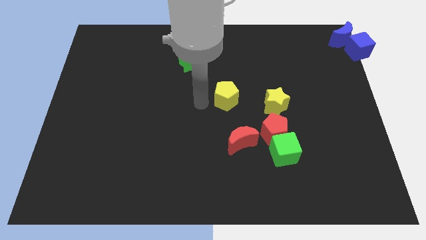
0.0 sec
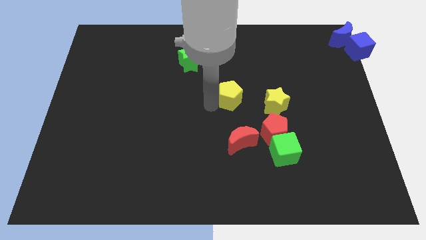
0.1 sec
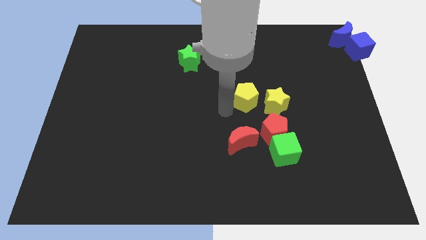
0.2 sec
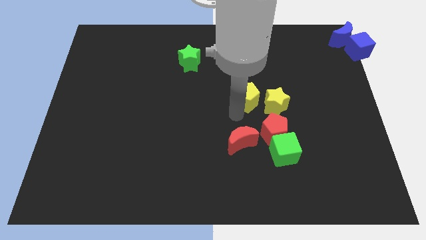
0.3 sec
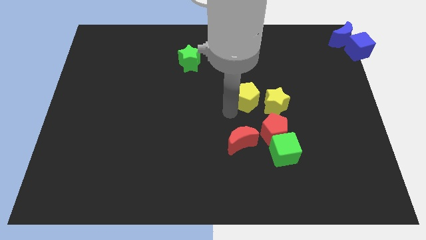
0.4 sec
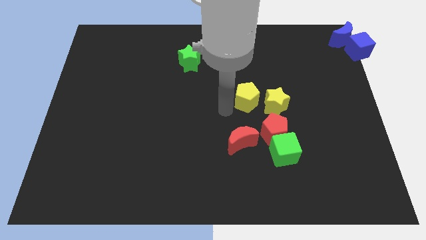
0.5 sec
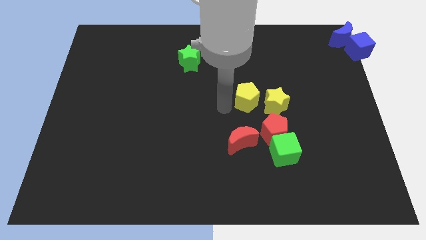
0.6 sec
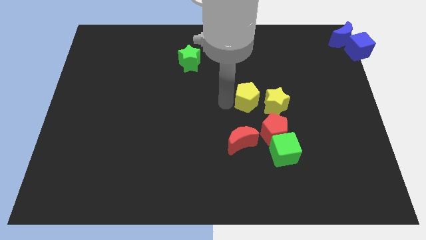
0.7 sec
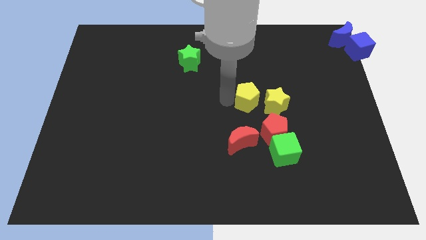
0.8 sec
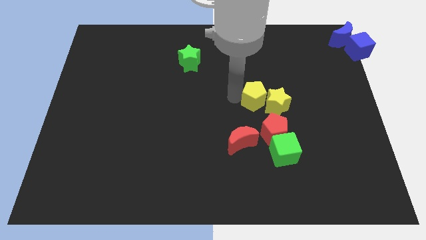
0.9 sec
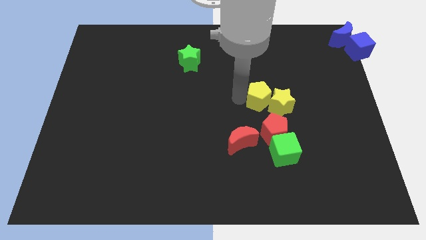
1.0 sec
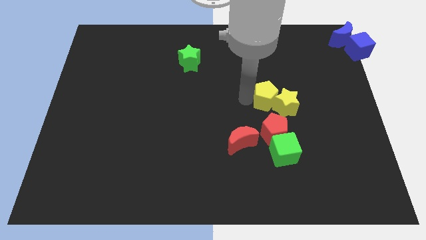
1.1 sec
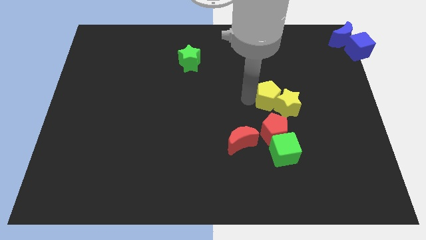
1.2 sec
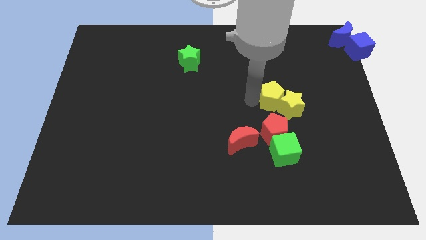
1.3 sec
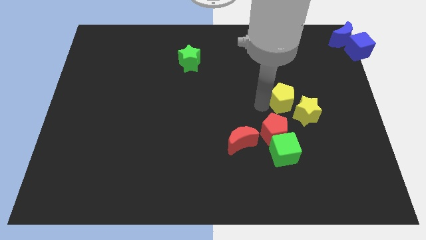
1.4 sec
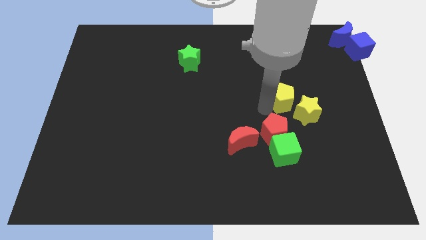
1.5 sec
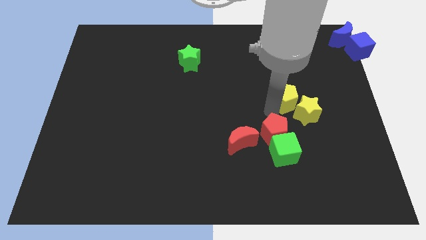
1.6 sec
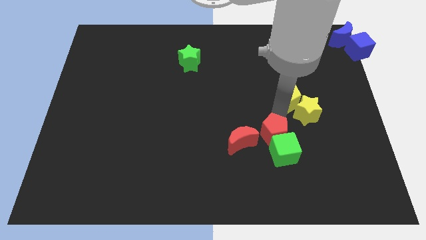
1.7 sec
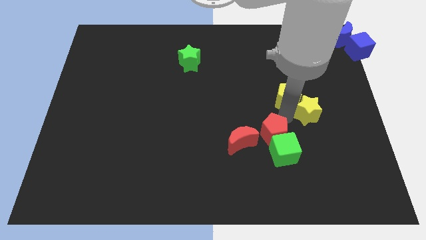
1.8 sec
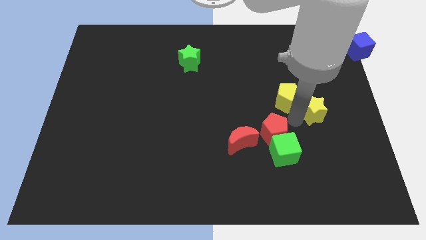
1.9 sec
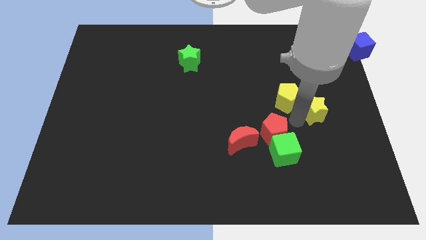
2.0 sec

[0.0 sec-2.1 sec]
move yellow pentagon near to the red pentagon

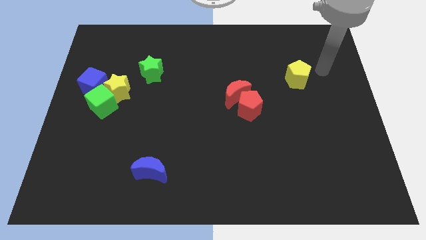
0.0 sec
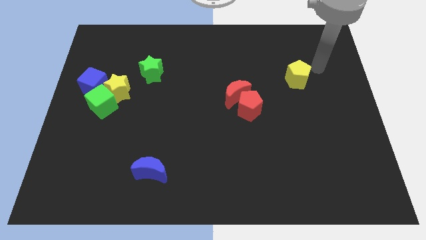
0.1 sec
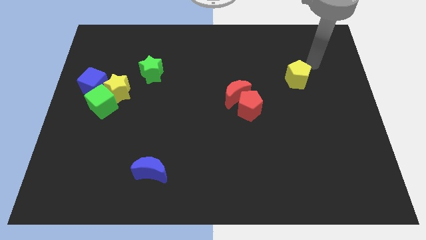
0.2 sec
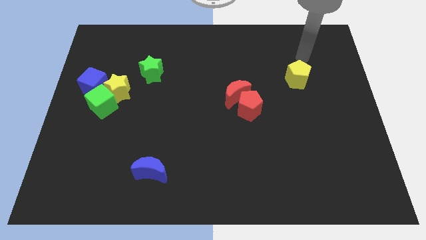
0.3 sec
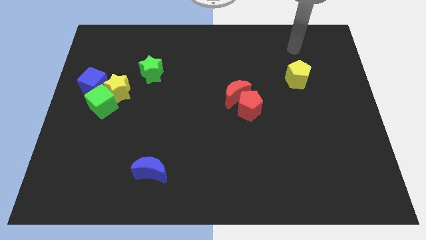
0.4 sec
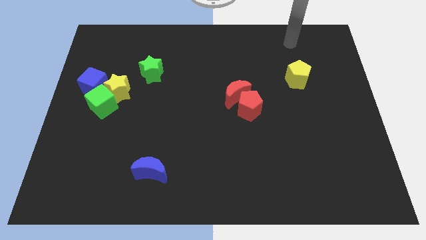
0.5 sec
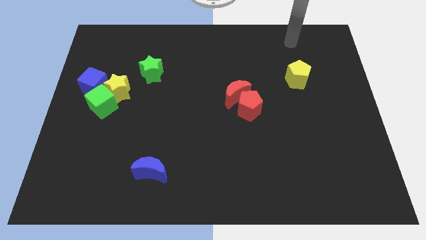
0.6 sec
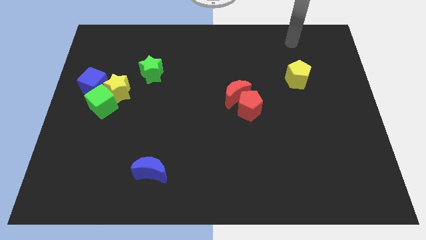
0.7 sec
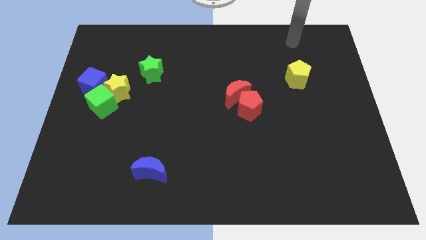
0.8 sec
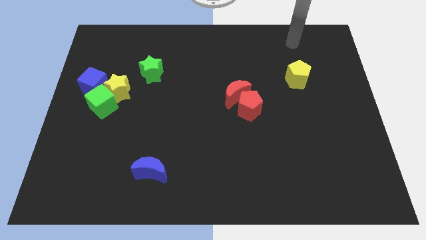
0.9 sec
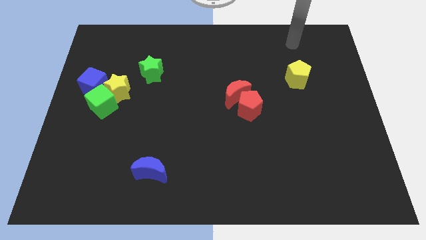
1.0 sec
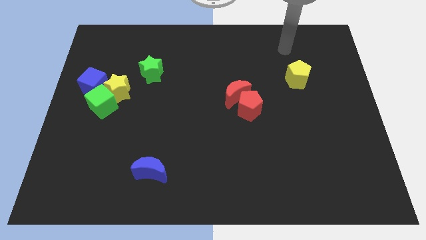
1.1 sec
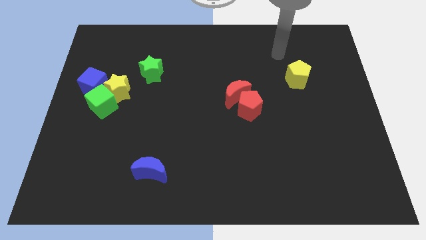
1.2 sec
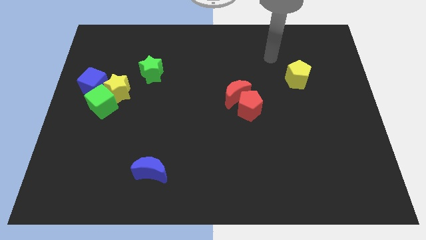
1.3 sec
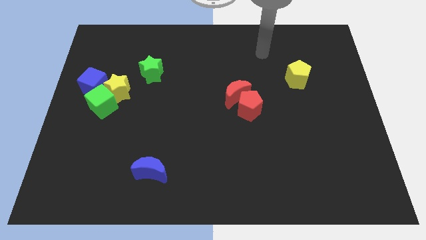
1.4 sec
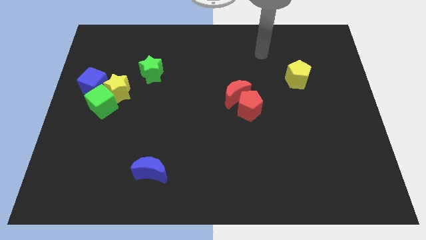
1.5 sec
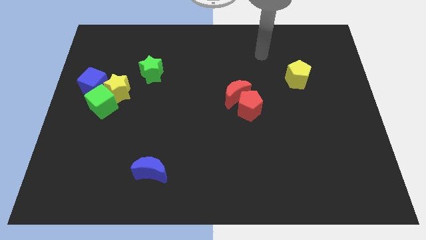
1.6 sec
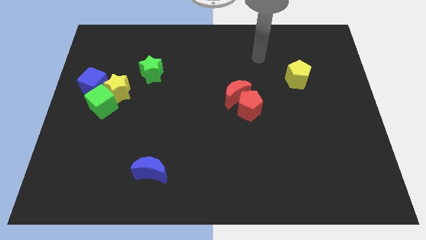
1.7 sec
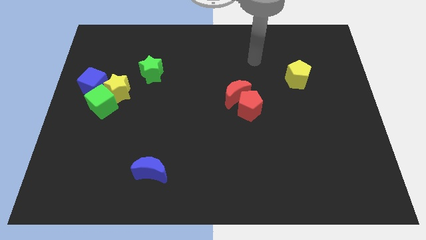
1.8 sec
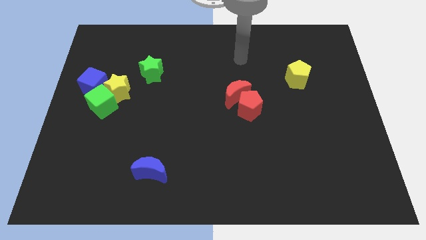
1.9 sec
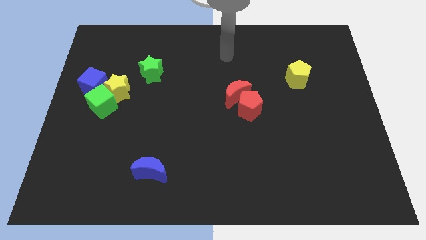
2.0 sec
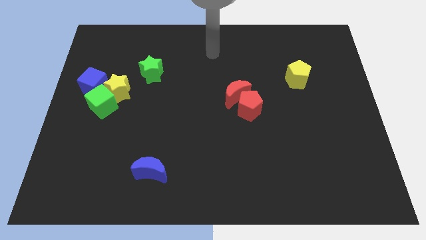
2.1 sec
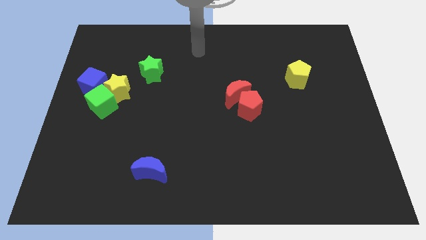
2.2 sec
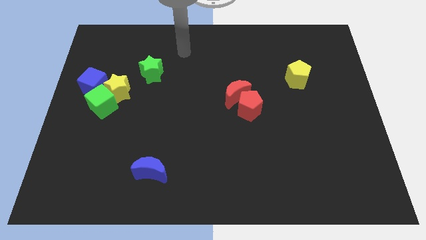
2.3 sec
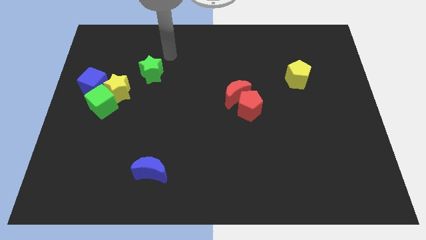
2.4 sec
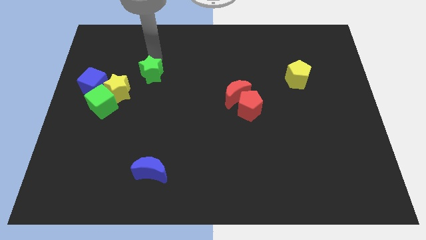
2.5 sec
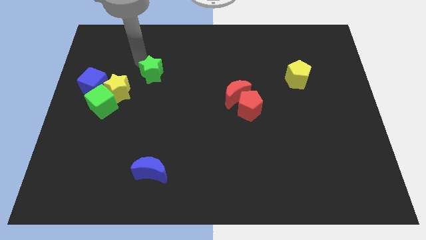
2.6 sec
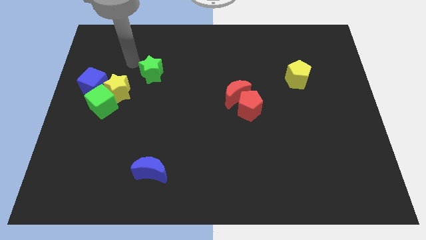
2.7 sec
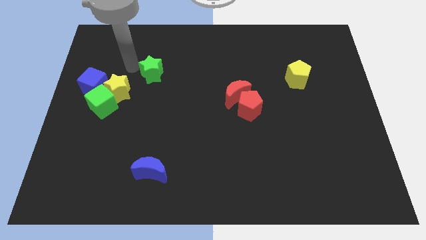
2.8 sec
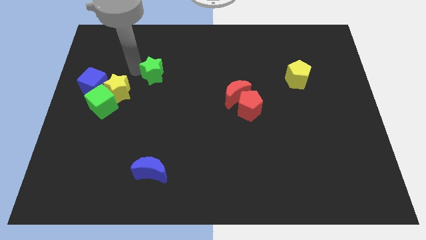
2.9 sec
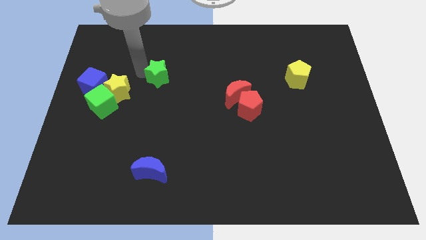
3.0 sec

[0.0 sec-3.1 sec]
tap left edge of green star

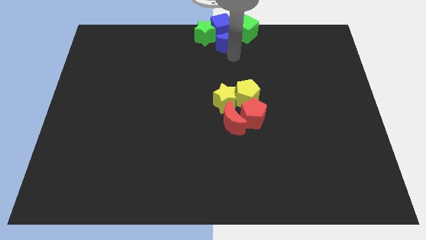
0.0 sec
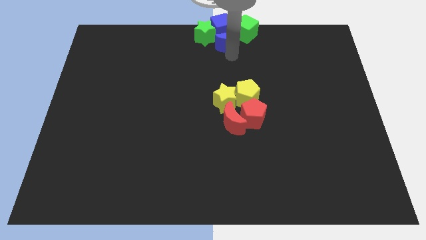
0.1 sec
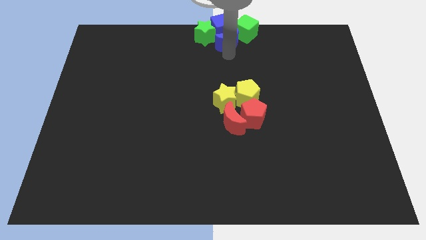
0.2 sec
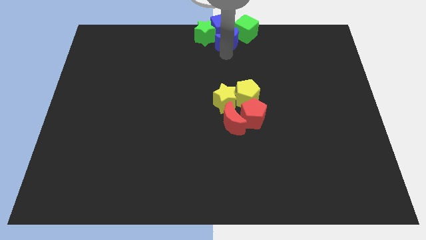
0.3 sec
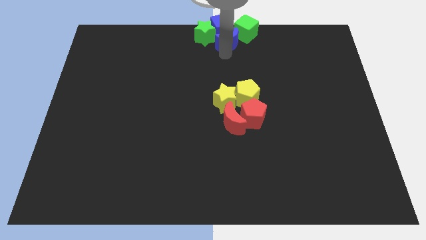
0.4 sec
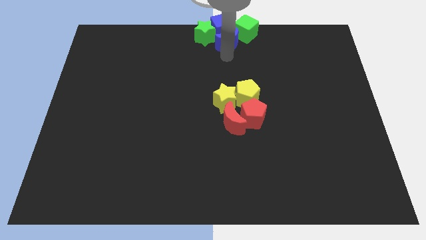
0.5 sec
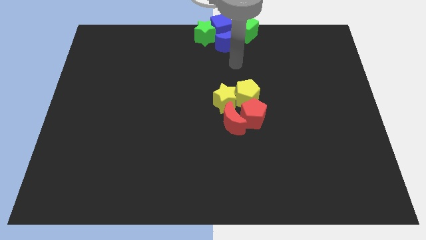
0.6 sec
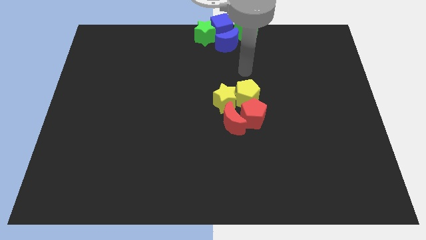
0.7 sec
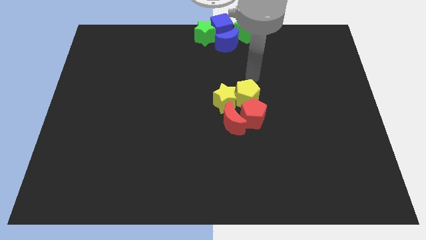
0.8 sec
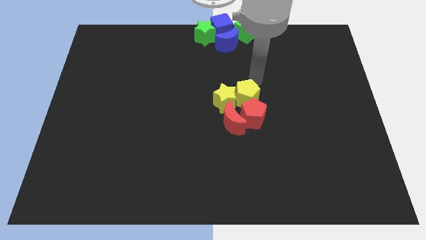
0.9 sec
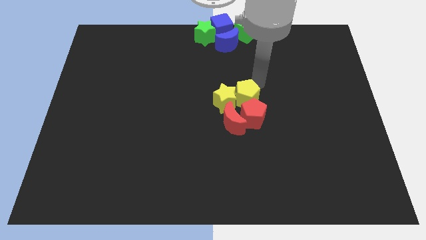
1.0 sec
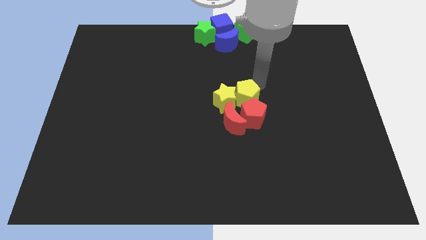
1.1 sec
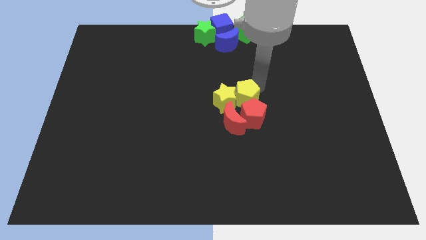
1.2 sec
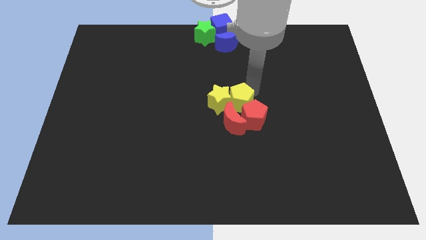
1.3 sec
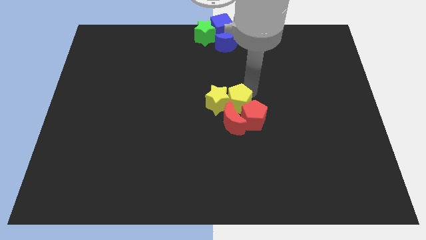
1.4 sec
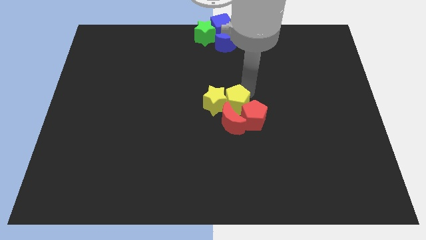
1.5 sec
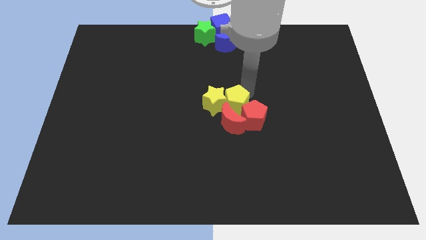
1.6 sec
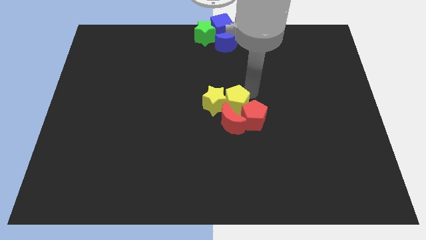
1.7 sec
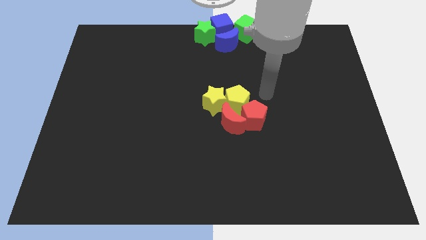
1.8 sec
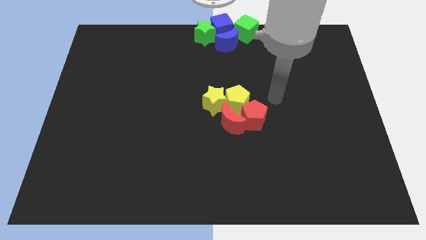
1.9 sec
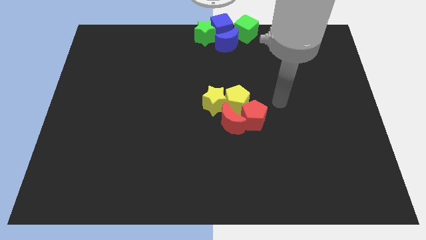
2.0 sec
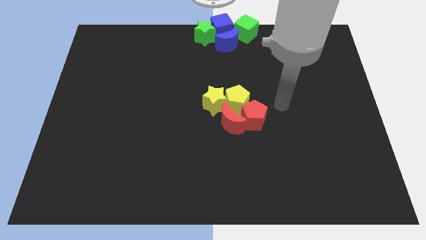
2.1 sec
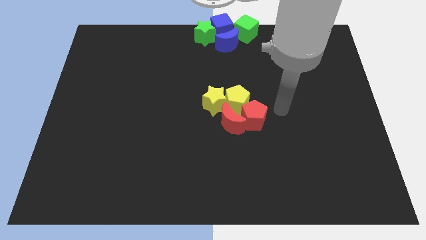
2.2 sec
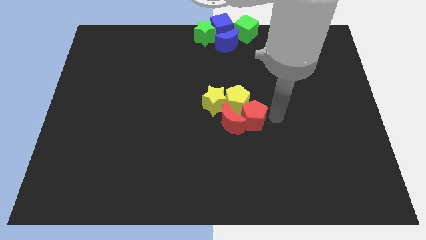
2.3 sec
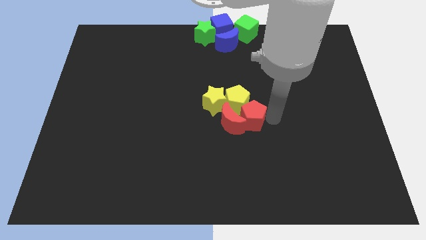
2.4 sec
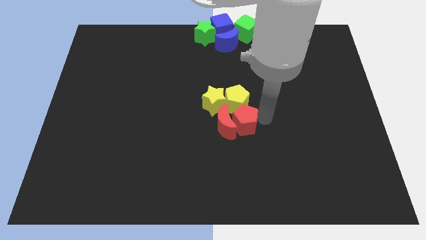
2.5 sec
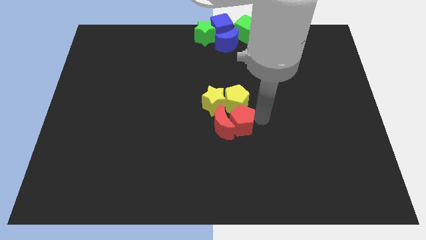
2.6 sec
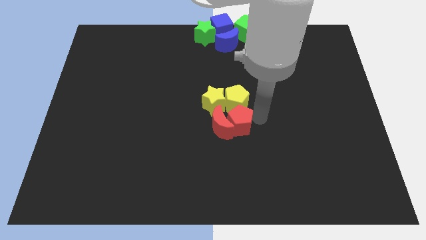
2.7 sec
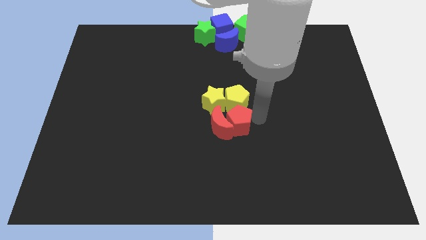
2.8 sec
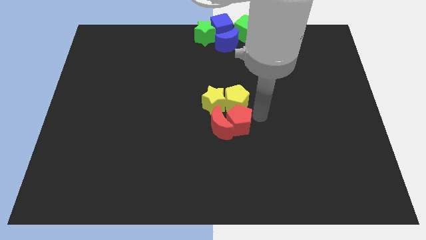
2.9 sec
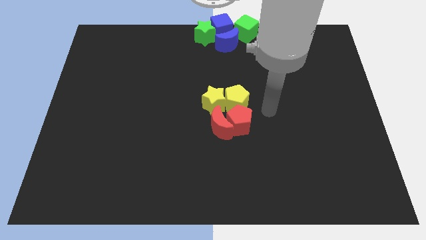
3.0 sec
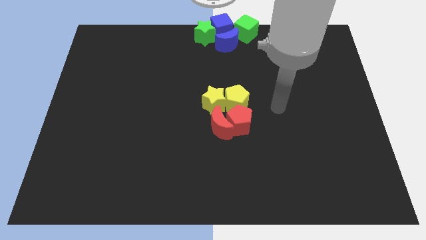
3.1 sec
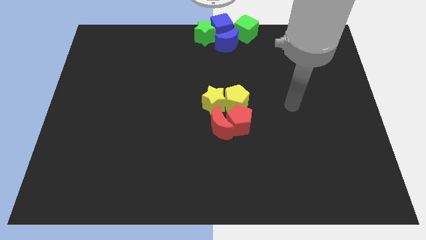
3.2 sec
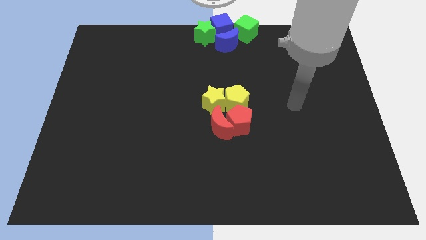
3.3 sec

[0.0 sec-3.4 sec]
push the yellow pentagon and red pentagon to the center of the board

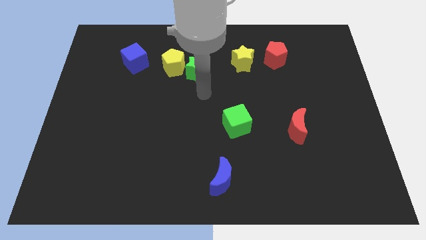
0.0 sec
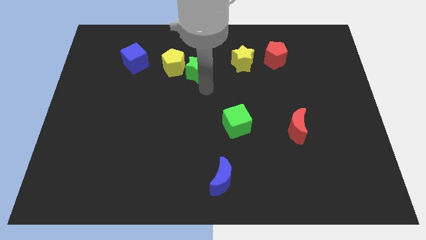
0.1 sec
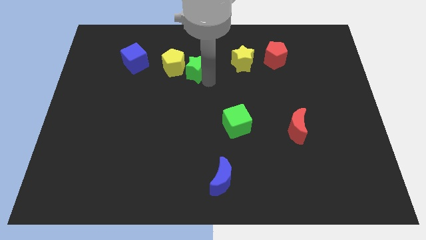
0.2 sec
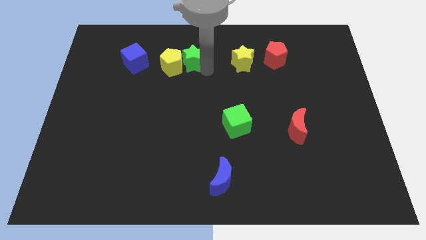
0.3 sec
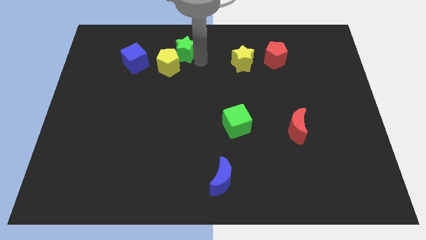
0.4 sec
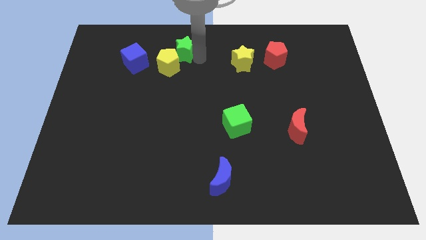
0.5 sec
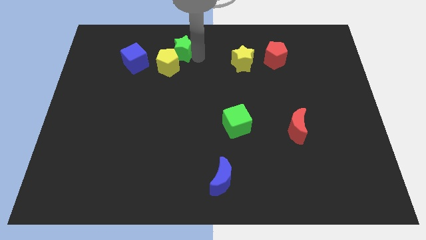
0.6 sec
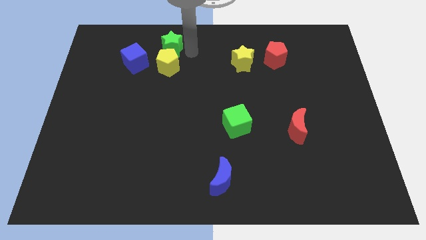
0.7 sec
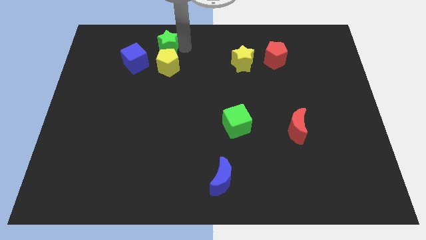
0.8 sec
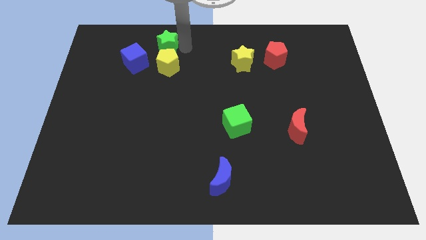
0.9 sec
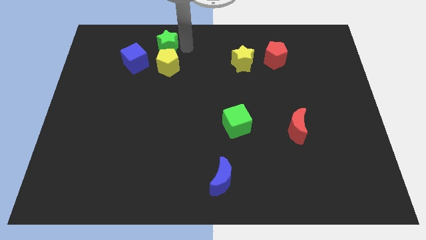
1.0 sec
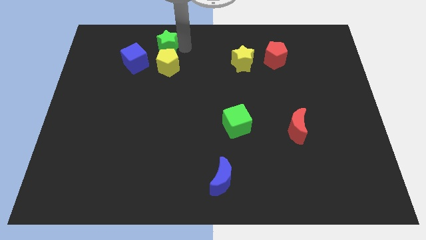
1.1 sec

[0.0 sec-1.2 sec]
push the green star to the top side of the yellow pentagon
